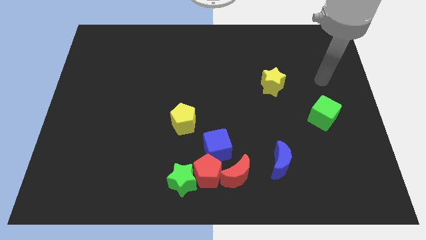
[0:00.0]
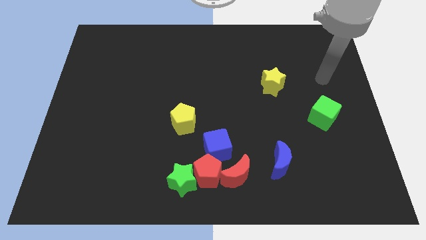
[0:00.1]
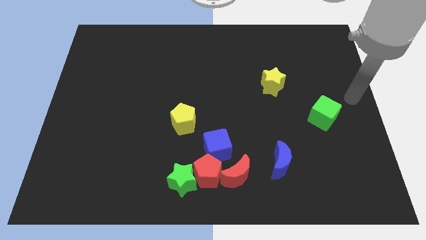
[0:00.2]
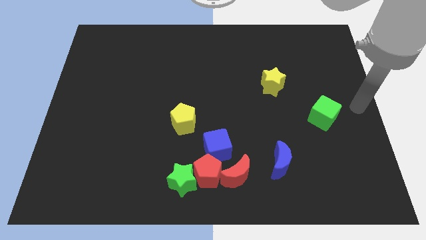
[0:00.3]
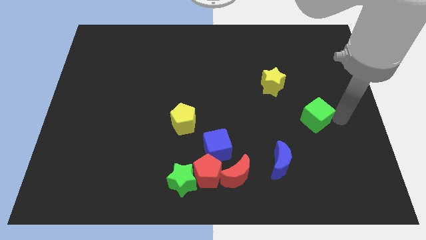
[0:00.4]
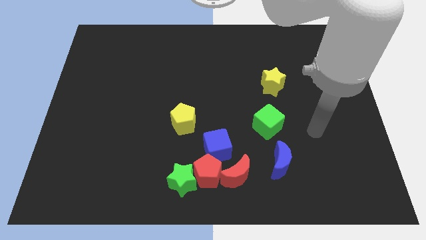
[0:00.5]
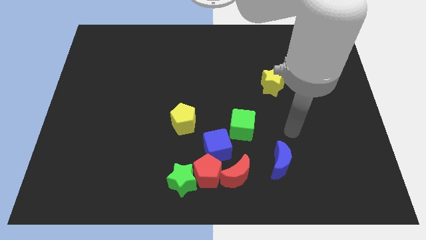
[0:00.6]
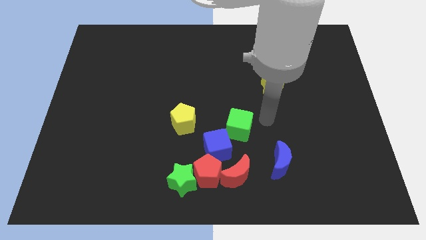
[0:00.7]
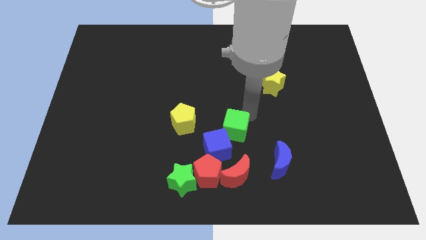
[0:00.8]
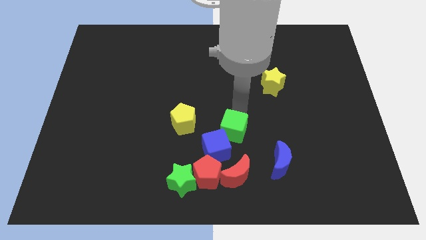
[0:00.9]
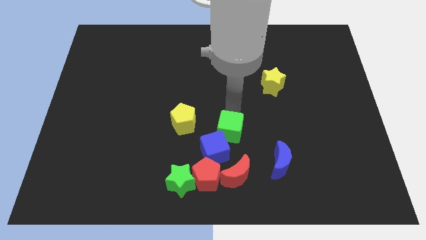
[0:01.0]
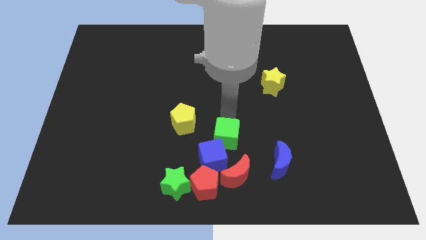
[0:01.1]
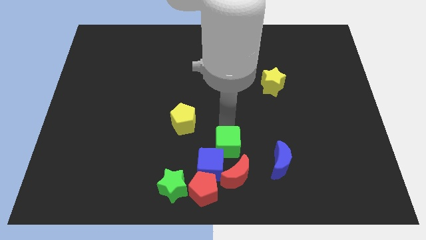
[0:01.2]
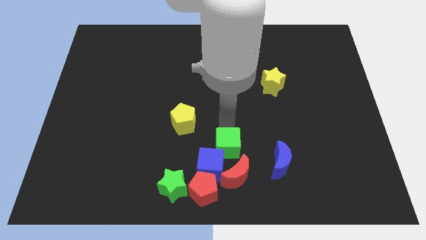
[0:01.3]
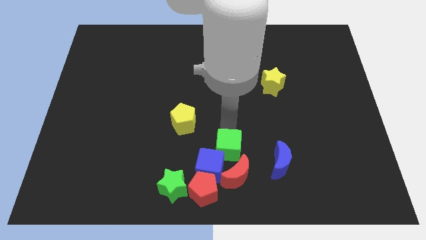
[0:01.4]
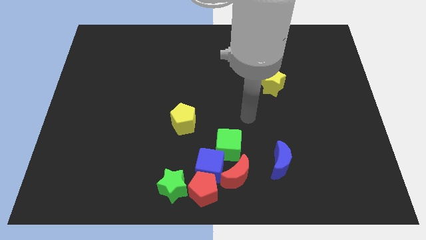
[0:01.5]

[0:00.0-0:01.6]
slide the green cube close to the blue cube

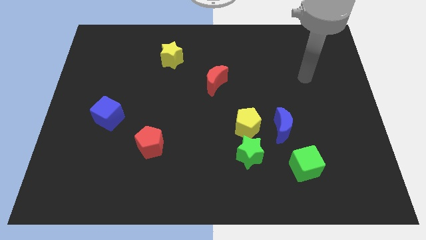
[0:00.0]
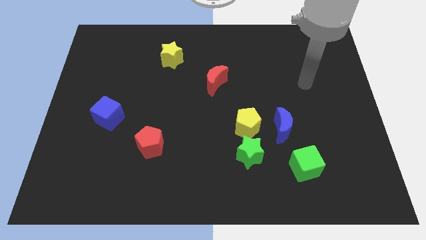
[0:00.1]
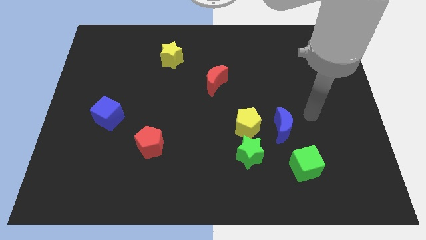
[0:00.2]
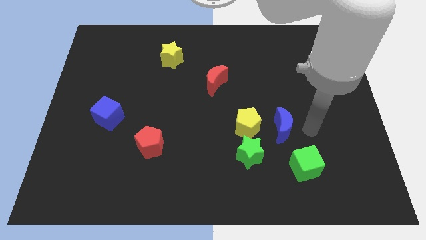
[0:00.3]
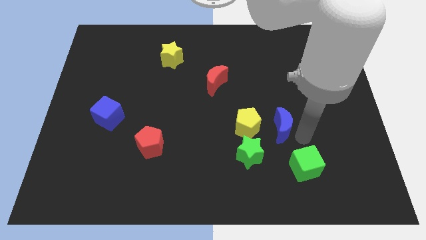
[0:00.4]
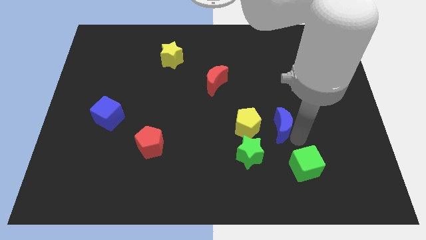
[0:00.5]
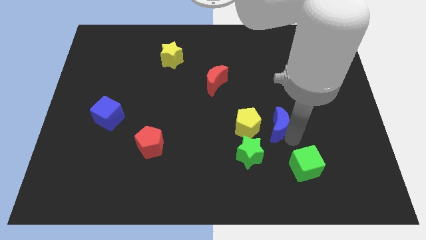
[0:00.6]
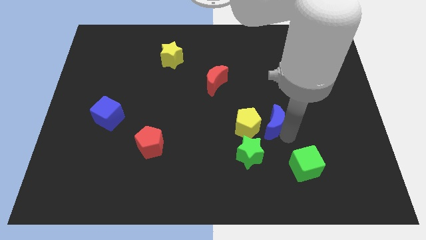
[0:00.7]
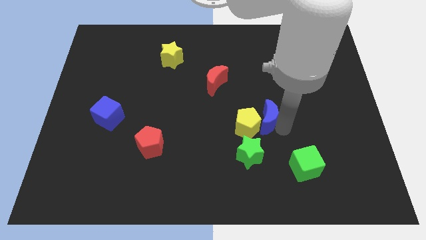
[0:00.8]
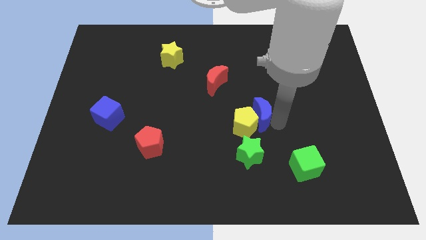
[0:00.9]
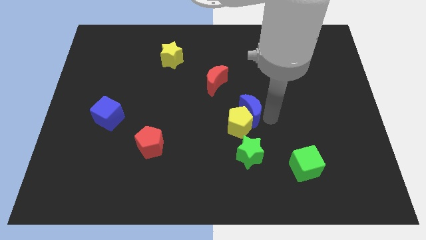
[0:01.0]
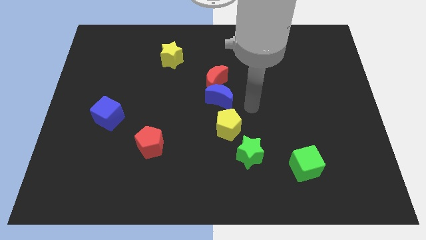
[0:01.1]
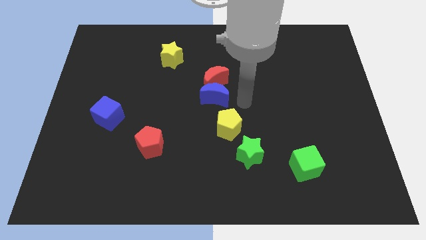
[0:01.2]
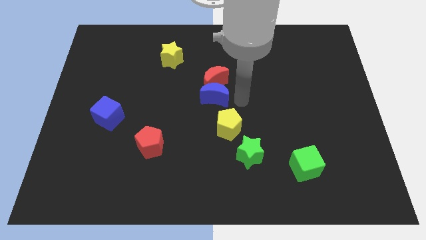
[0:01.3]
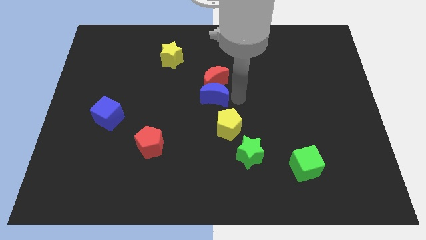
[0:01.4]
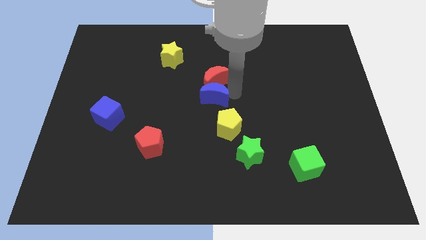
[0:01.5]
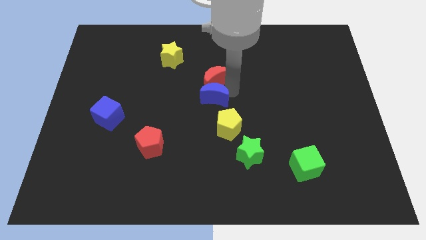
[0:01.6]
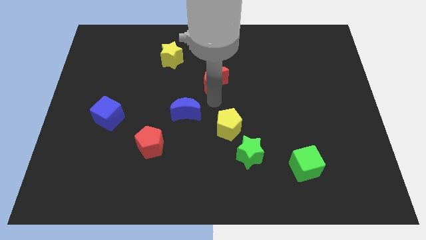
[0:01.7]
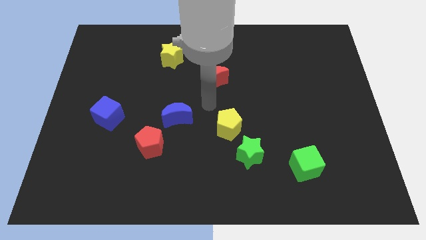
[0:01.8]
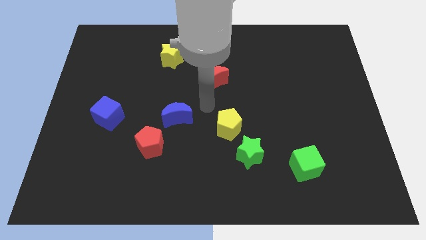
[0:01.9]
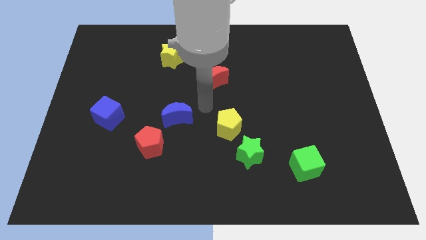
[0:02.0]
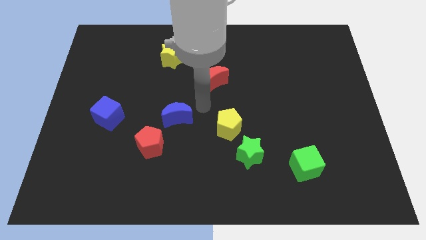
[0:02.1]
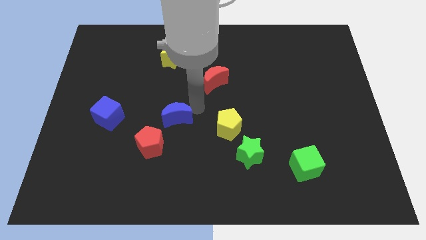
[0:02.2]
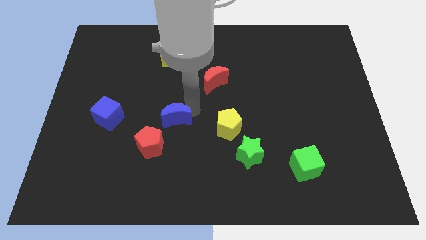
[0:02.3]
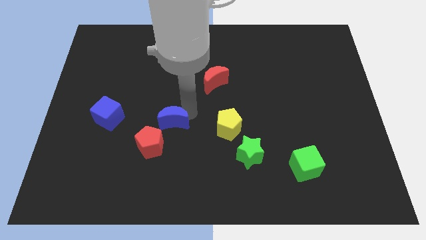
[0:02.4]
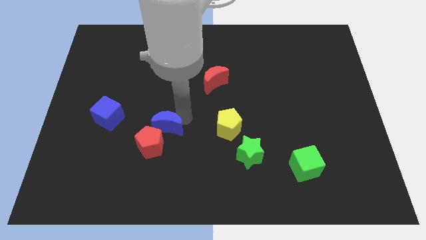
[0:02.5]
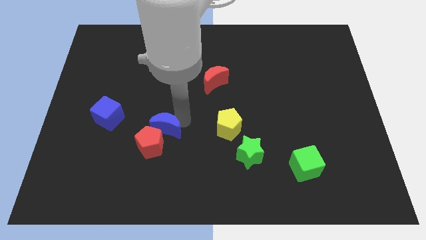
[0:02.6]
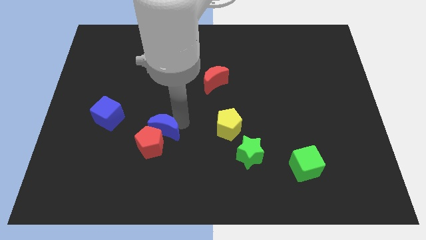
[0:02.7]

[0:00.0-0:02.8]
put the blue moon towards the red pentagon

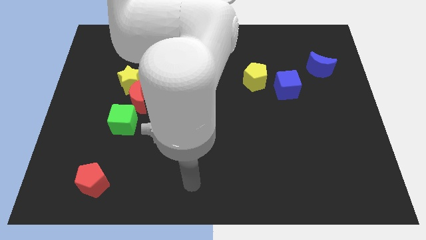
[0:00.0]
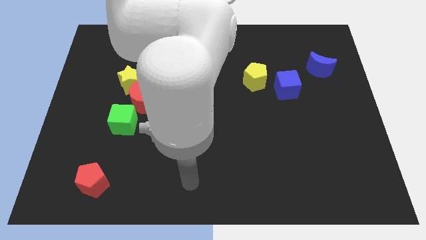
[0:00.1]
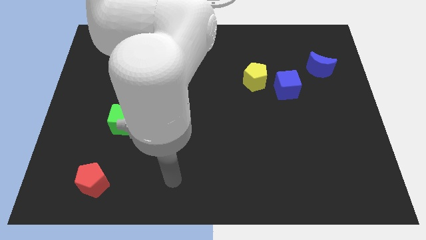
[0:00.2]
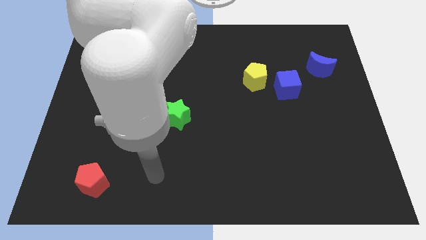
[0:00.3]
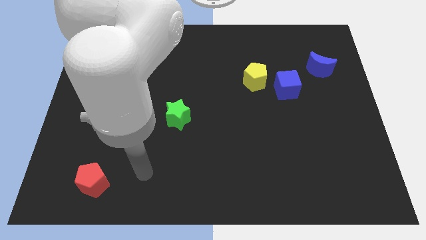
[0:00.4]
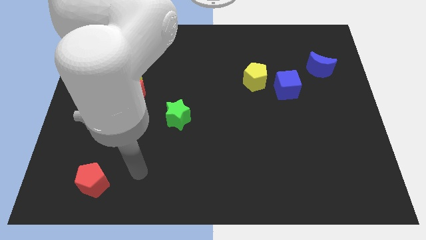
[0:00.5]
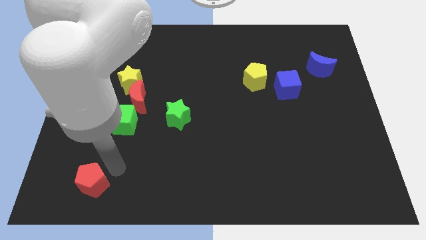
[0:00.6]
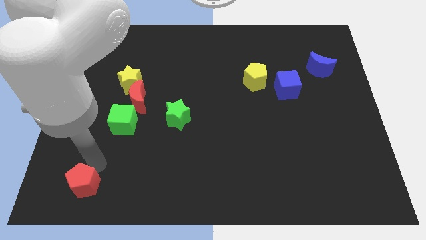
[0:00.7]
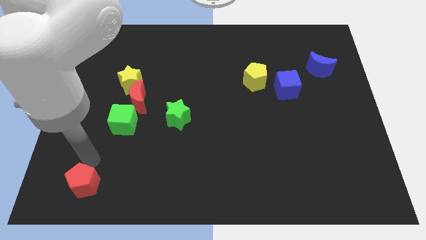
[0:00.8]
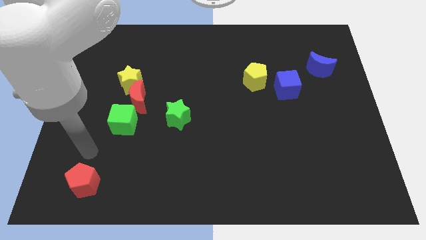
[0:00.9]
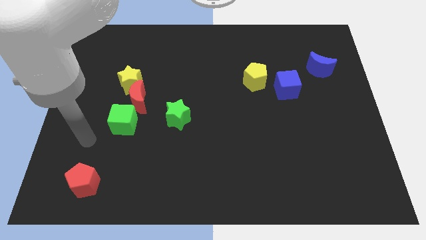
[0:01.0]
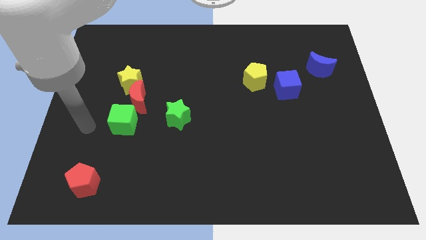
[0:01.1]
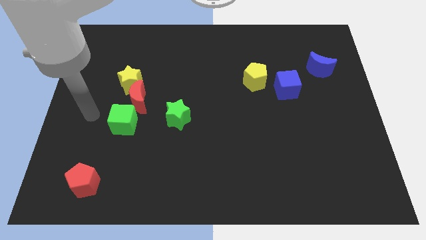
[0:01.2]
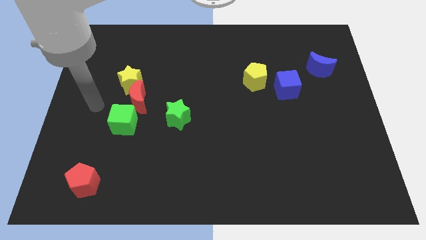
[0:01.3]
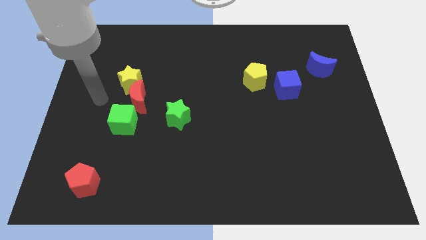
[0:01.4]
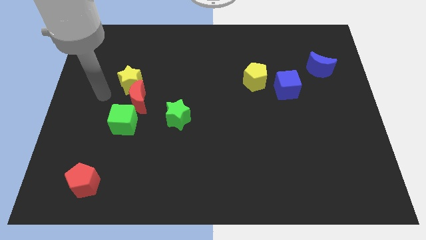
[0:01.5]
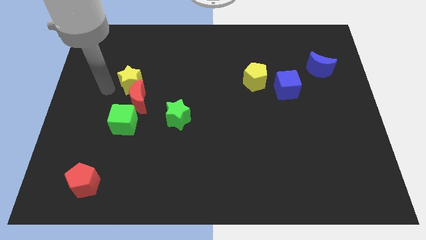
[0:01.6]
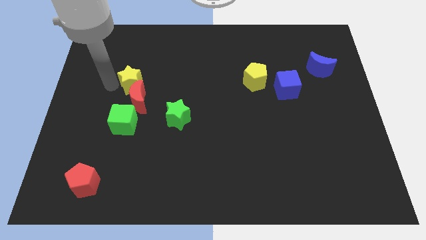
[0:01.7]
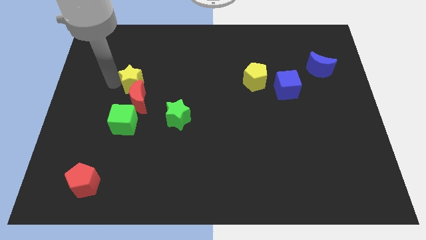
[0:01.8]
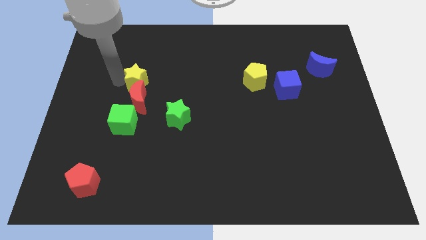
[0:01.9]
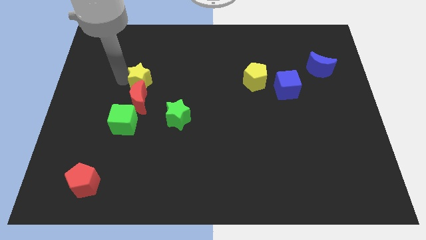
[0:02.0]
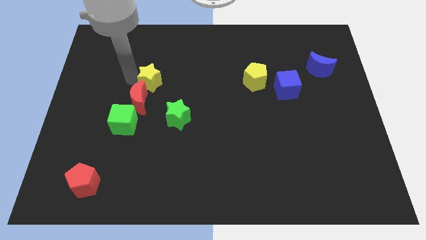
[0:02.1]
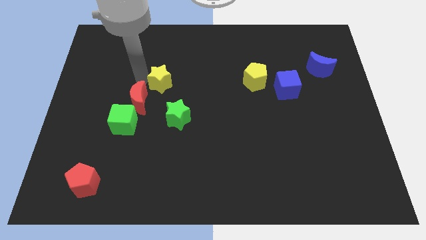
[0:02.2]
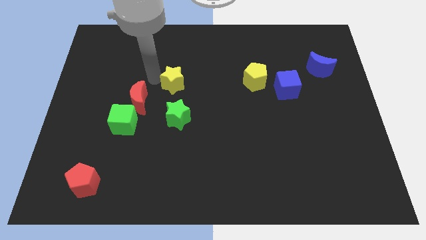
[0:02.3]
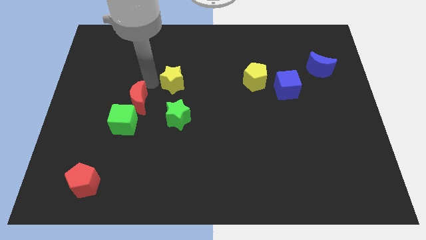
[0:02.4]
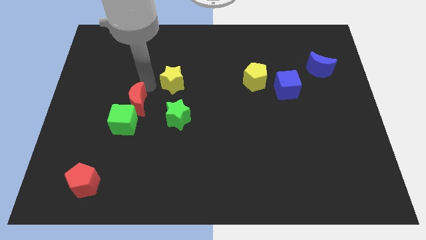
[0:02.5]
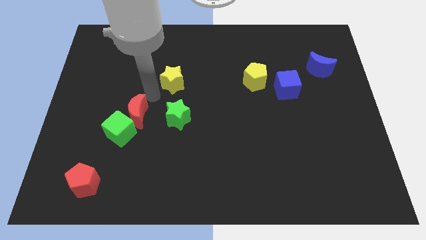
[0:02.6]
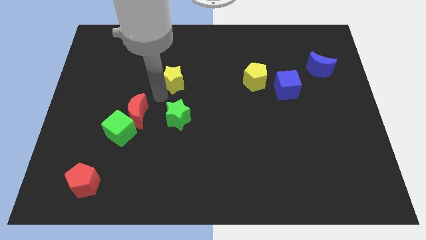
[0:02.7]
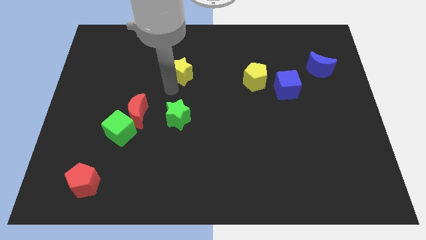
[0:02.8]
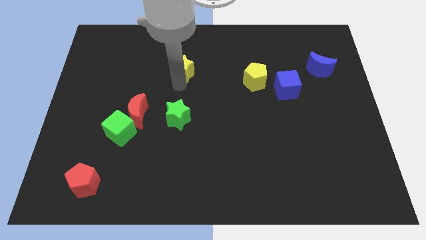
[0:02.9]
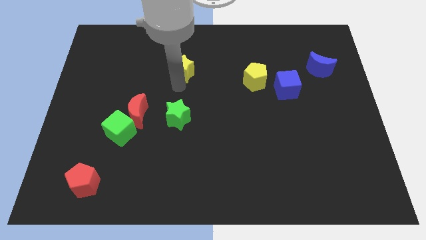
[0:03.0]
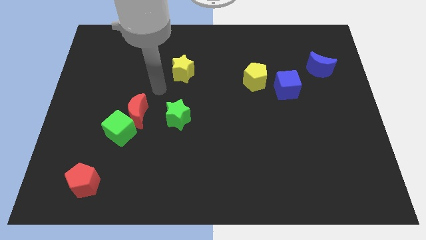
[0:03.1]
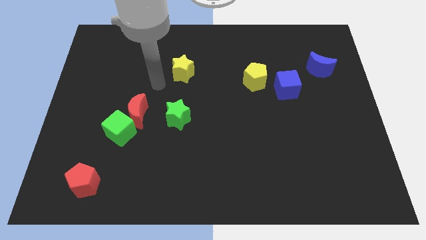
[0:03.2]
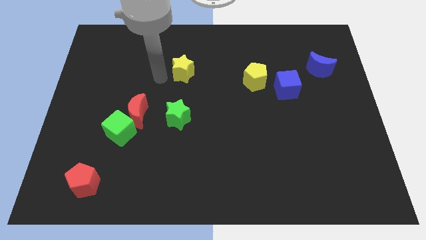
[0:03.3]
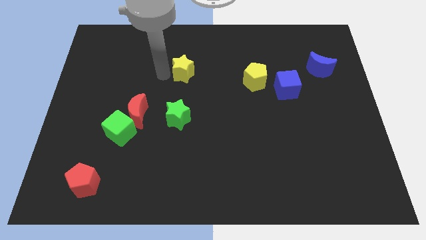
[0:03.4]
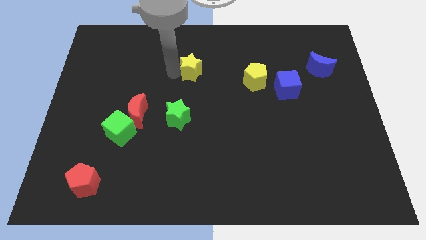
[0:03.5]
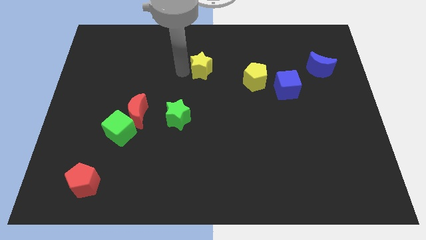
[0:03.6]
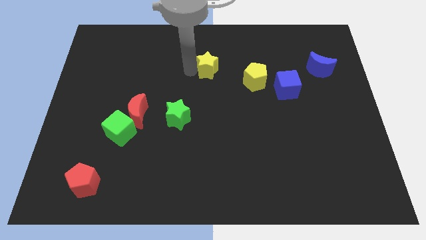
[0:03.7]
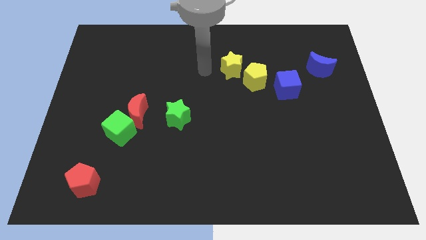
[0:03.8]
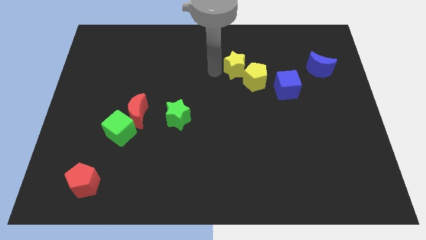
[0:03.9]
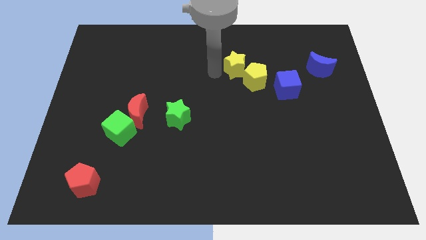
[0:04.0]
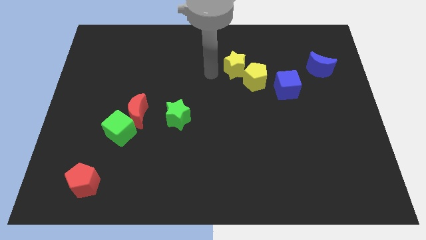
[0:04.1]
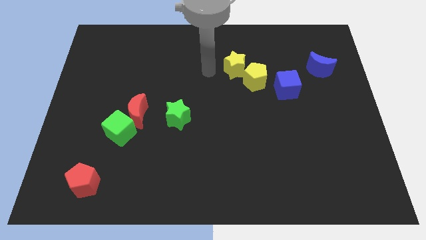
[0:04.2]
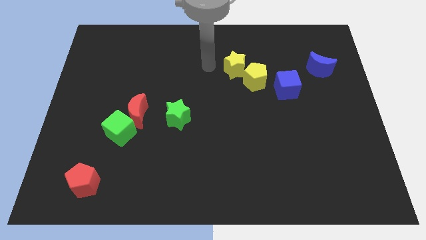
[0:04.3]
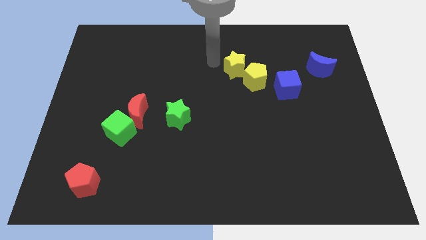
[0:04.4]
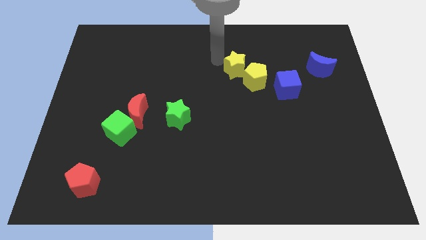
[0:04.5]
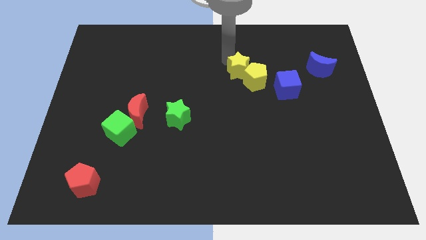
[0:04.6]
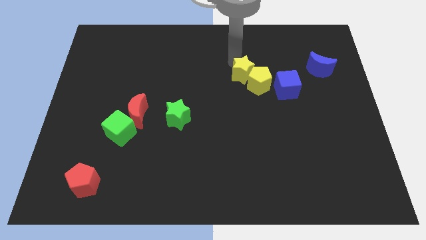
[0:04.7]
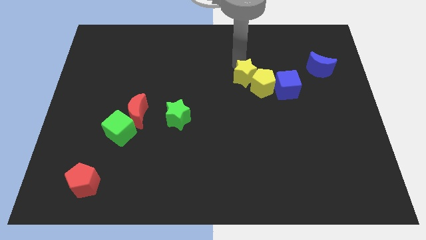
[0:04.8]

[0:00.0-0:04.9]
slide the yellow star towards the yellow pentagon
